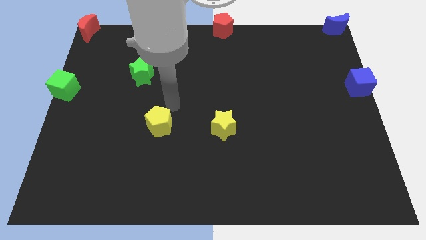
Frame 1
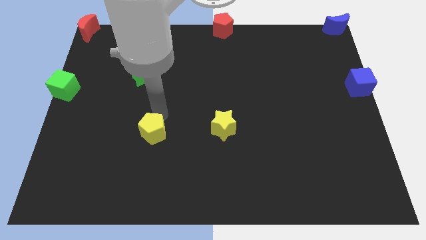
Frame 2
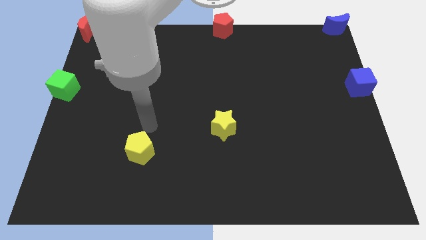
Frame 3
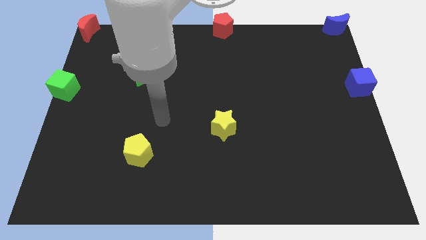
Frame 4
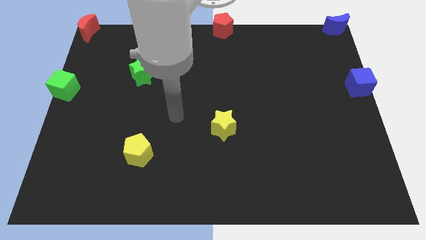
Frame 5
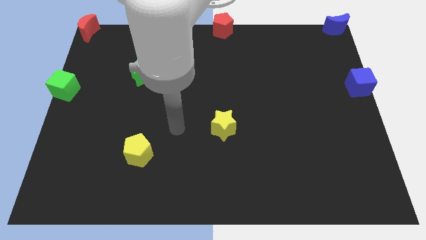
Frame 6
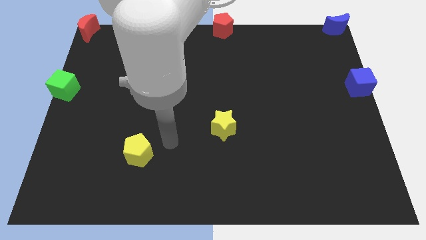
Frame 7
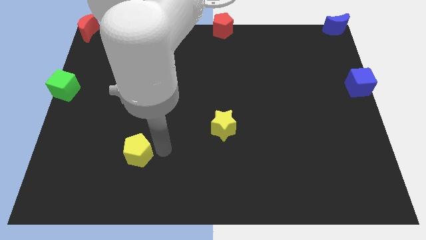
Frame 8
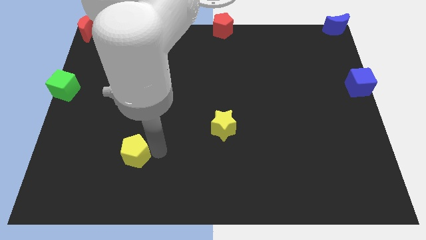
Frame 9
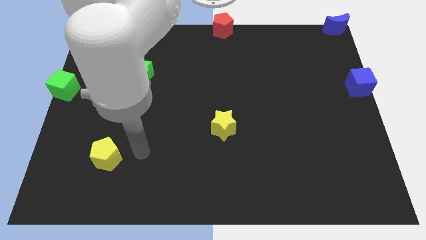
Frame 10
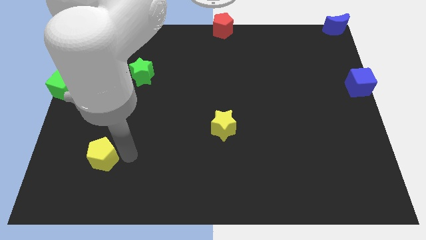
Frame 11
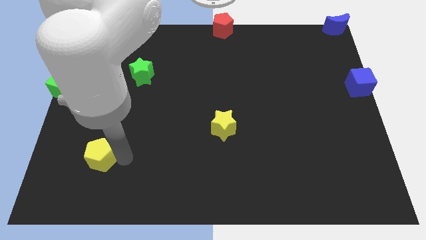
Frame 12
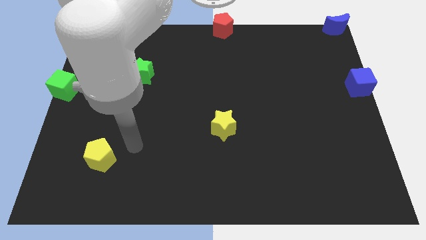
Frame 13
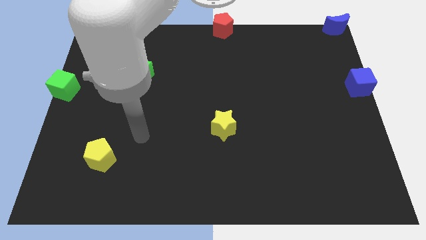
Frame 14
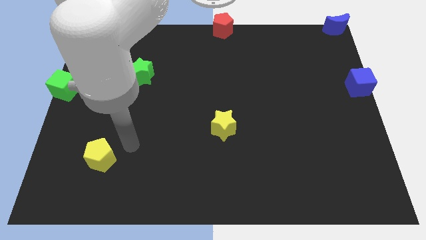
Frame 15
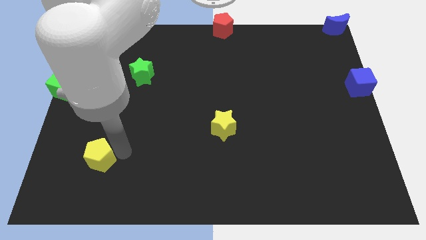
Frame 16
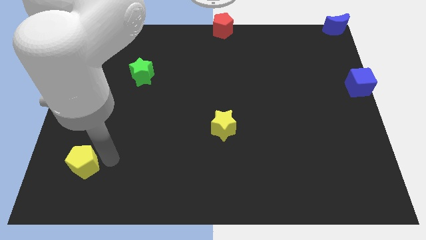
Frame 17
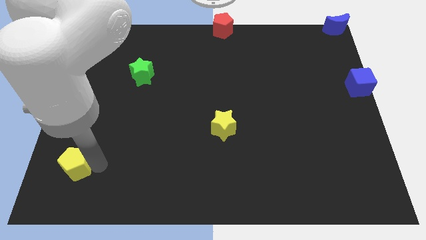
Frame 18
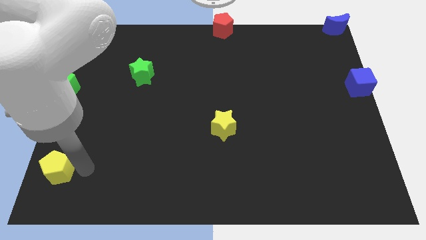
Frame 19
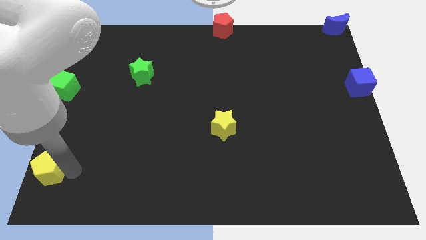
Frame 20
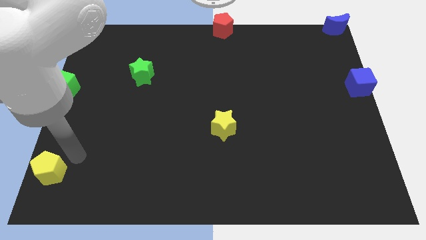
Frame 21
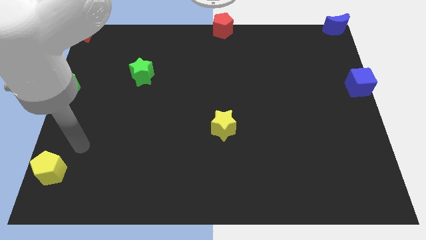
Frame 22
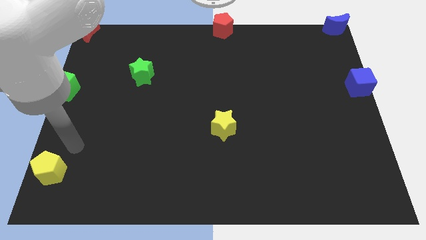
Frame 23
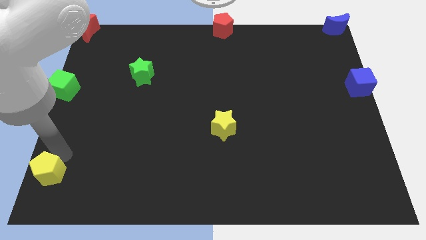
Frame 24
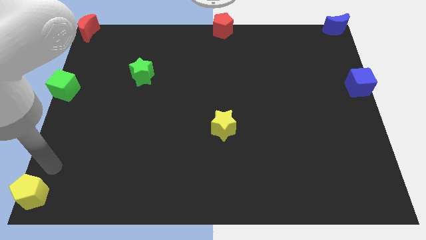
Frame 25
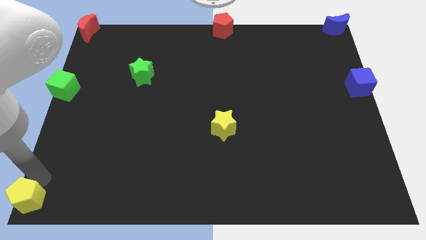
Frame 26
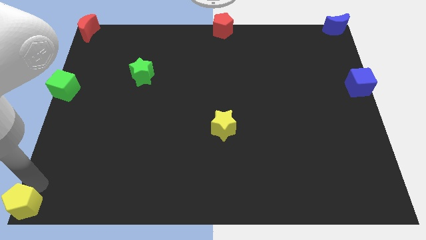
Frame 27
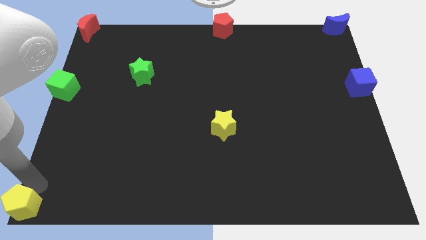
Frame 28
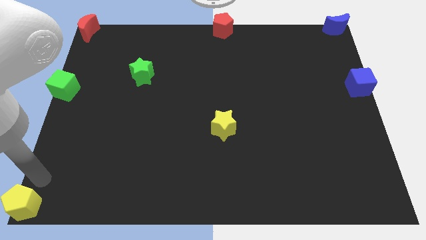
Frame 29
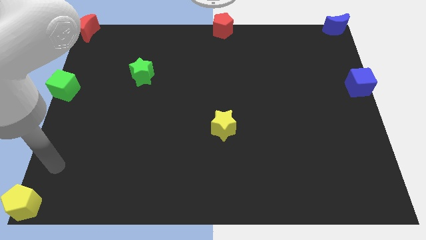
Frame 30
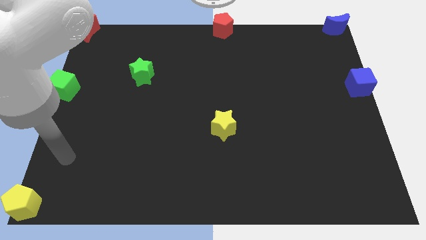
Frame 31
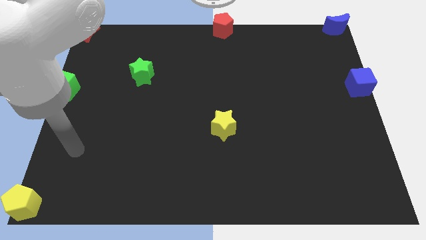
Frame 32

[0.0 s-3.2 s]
put the yellow pentagon at the bottom left corner

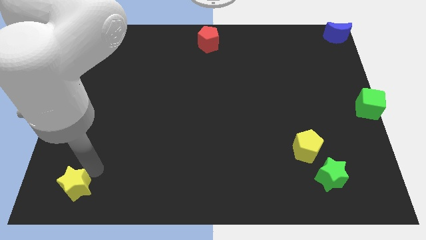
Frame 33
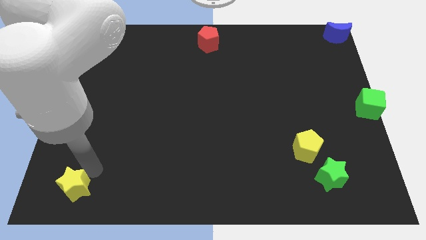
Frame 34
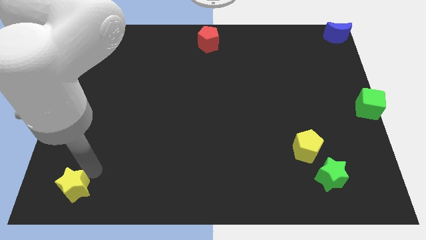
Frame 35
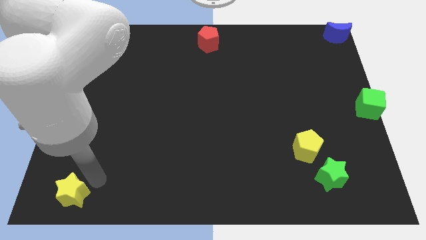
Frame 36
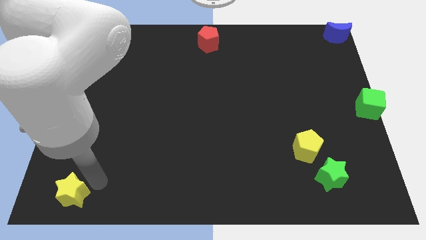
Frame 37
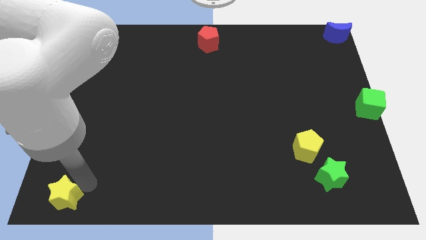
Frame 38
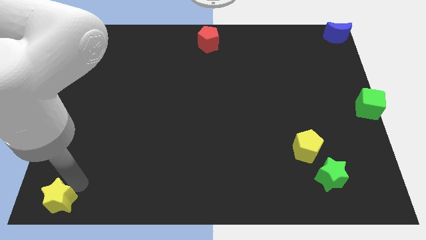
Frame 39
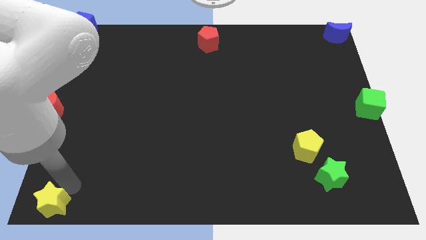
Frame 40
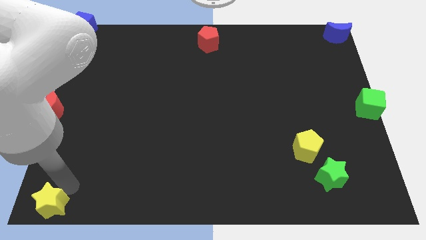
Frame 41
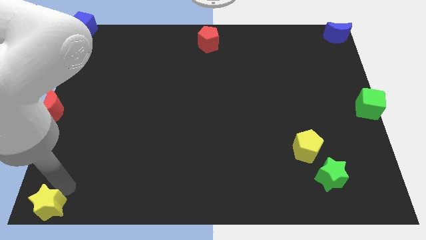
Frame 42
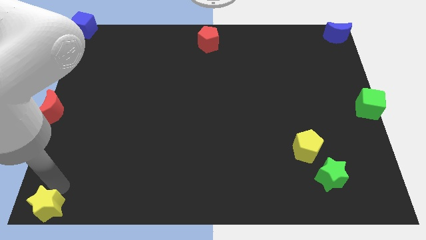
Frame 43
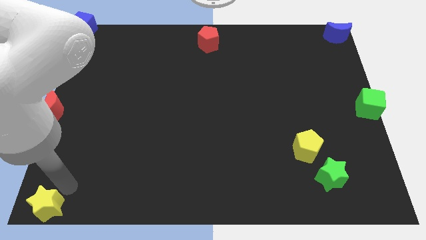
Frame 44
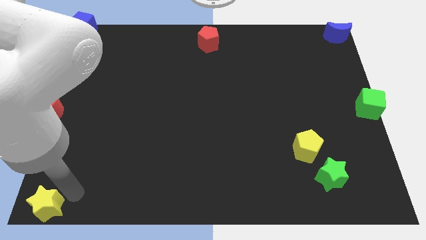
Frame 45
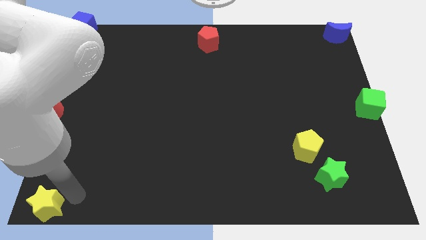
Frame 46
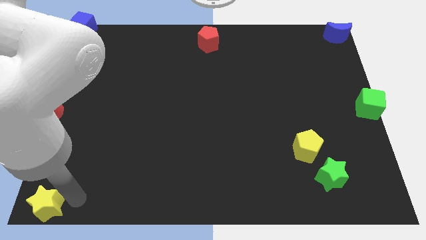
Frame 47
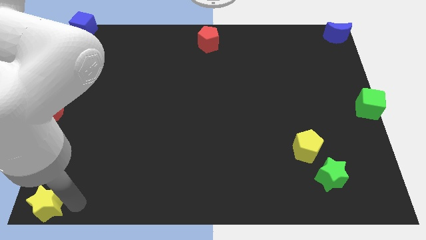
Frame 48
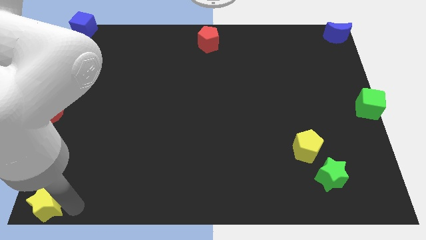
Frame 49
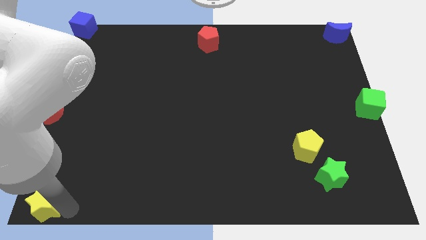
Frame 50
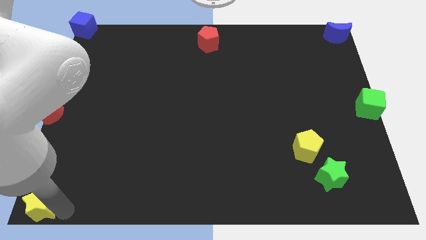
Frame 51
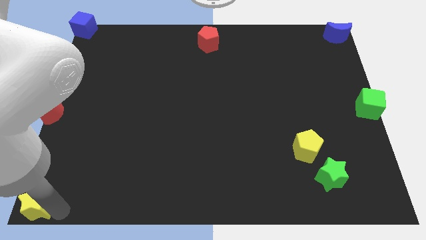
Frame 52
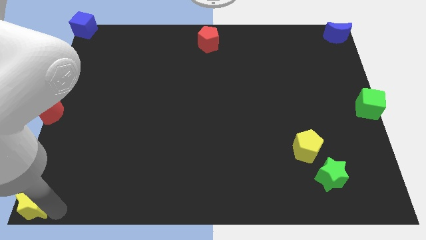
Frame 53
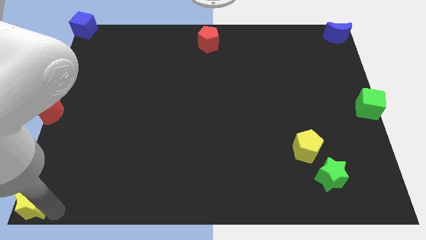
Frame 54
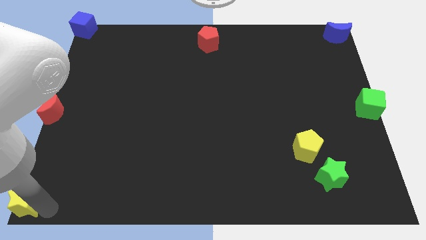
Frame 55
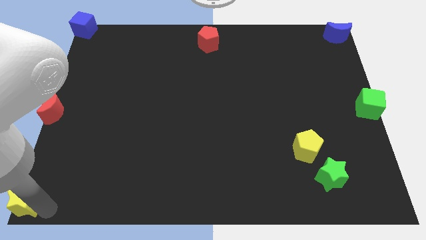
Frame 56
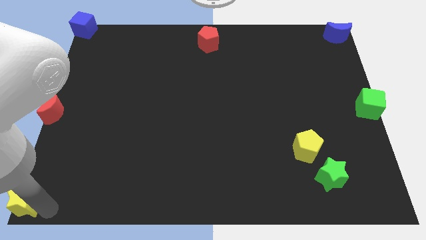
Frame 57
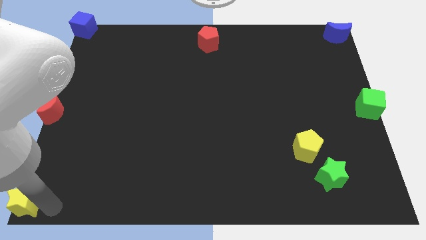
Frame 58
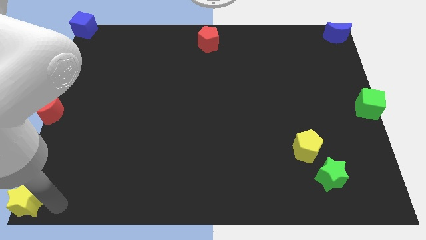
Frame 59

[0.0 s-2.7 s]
move the yellow star to the bottom left of the board

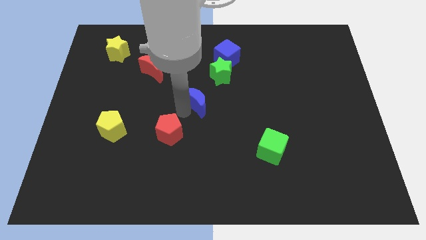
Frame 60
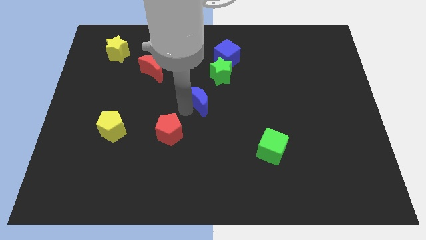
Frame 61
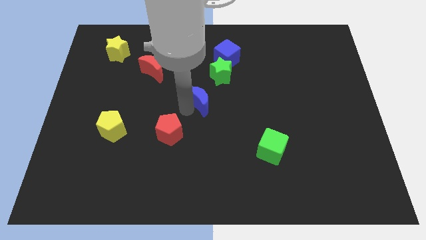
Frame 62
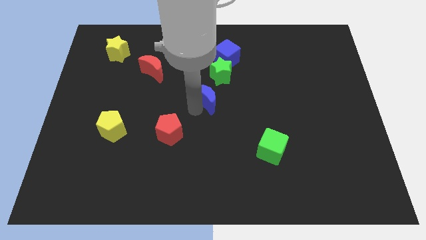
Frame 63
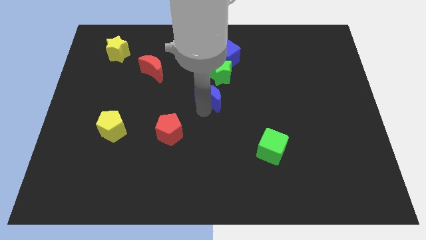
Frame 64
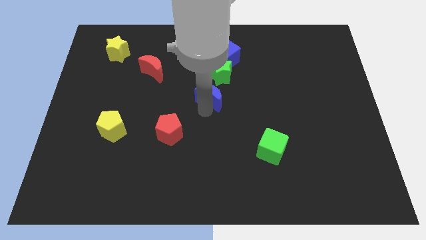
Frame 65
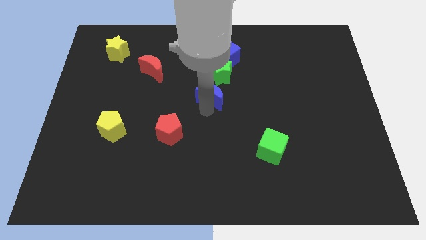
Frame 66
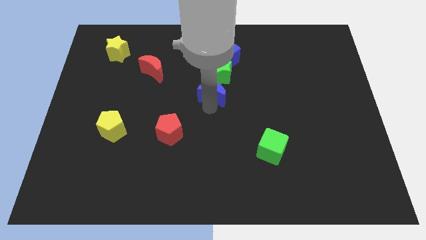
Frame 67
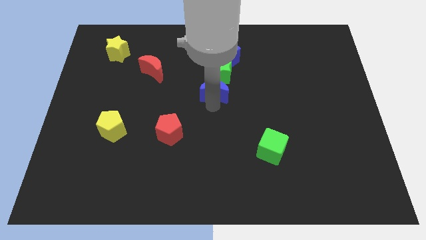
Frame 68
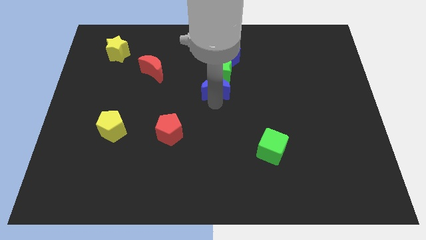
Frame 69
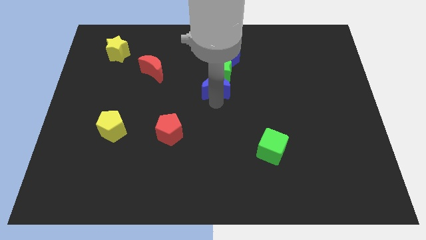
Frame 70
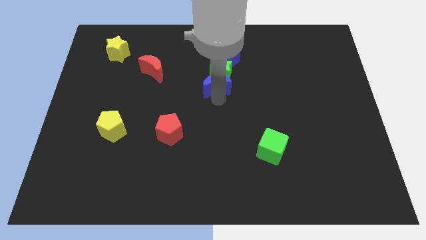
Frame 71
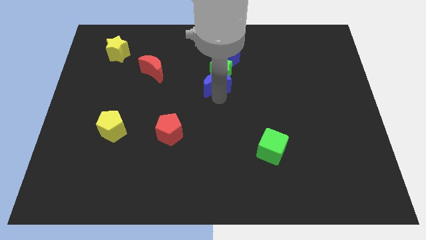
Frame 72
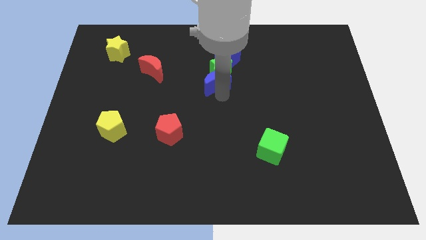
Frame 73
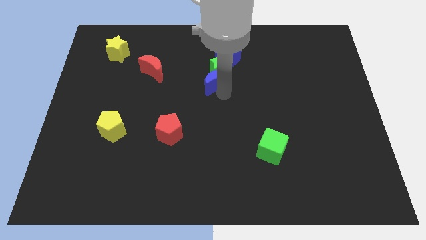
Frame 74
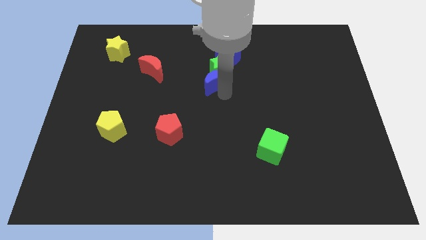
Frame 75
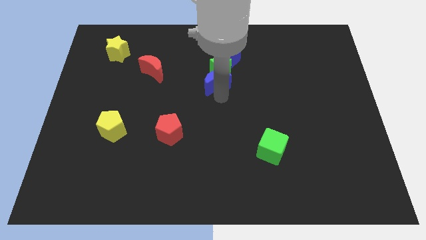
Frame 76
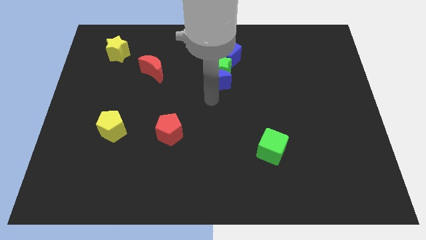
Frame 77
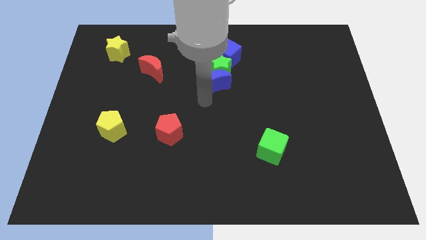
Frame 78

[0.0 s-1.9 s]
put the blue moon into the green star

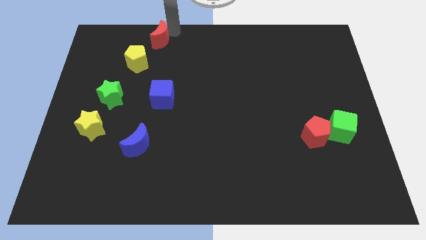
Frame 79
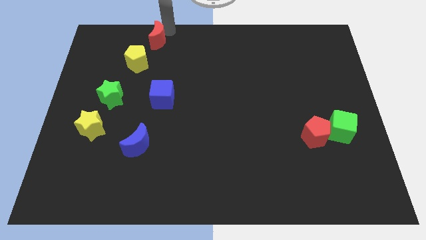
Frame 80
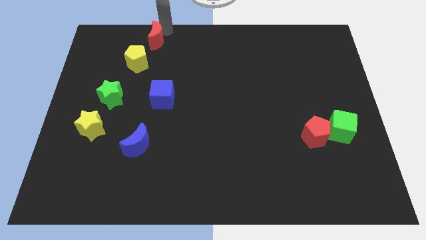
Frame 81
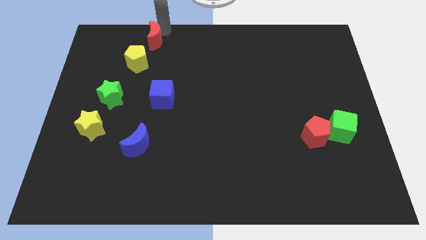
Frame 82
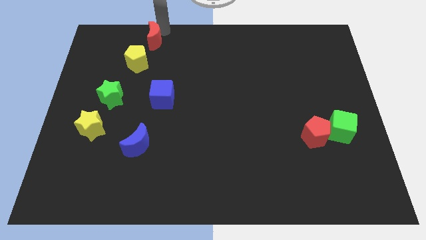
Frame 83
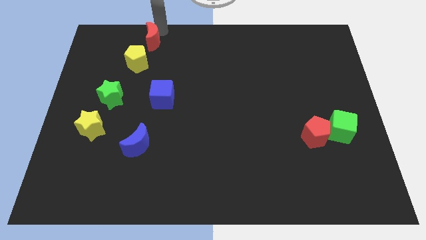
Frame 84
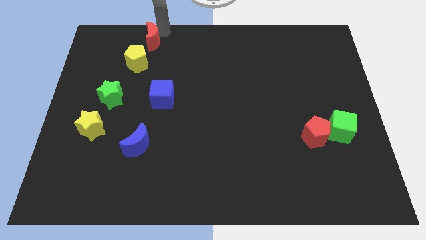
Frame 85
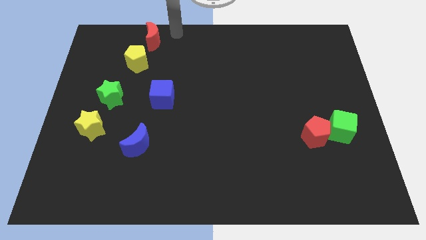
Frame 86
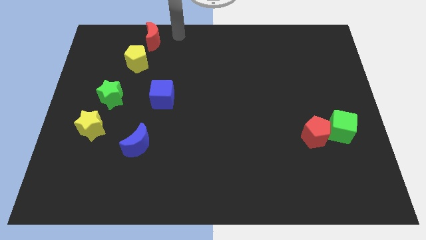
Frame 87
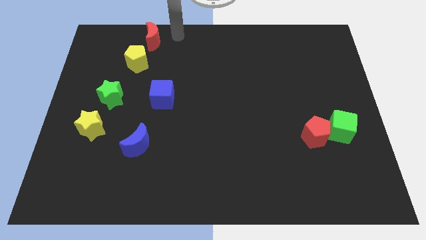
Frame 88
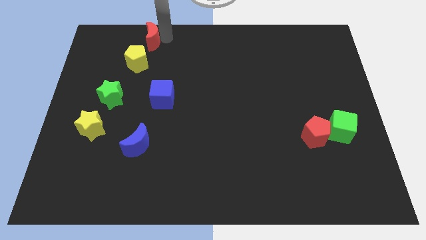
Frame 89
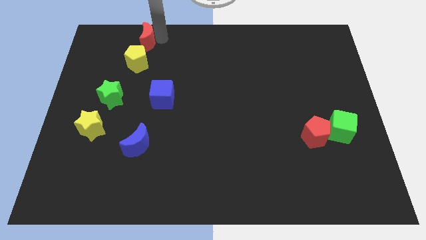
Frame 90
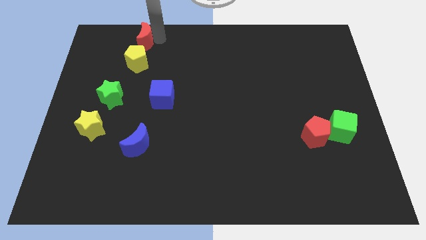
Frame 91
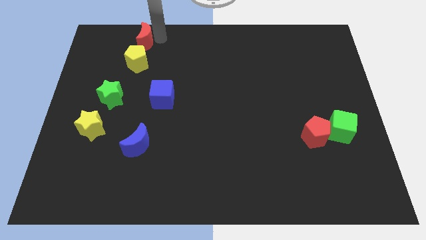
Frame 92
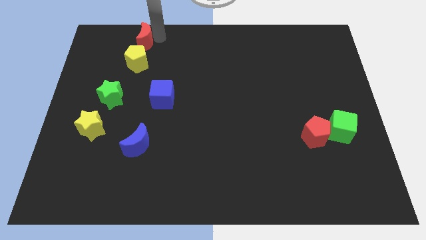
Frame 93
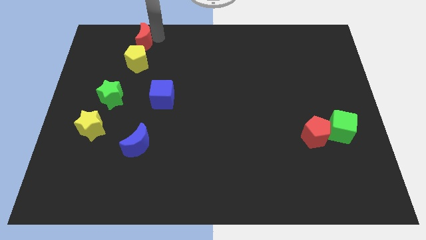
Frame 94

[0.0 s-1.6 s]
place the red crescent above the yellow pentagon
